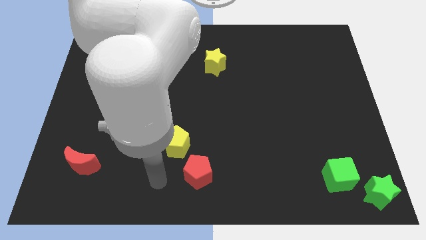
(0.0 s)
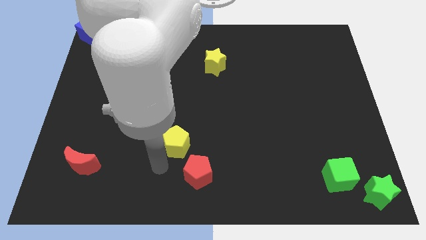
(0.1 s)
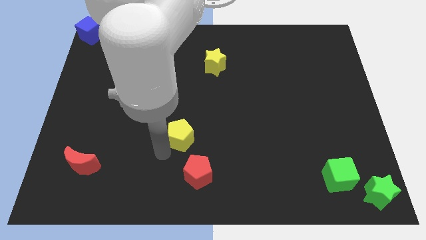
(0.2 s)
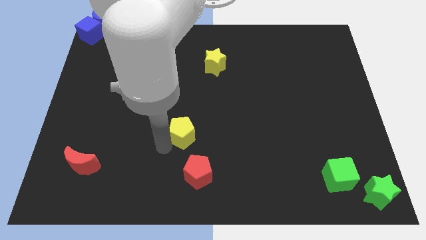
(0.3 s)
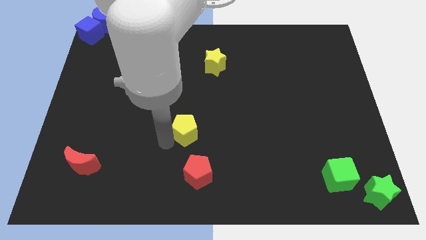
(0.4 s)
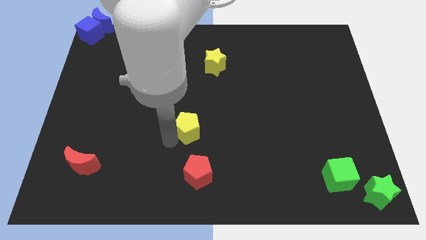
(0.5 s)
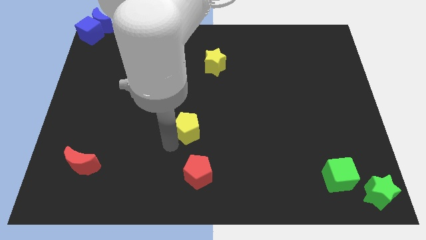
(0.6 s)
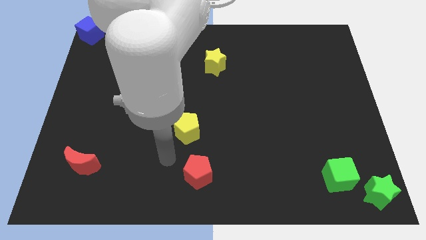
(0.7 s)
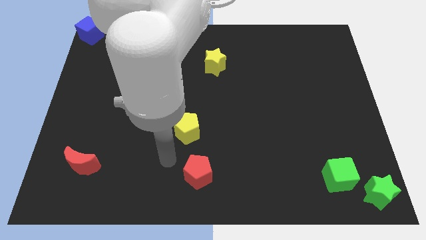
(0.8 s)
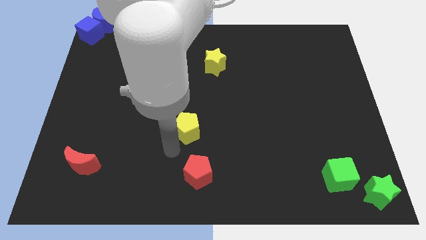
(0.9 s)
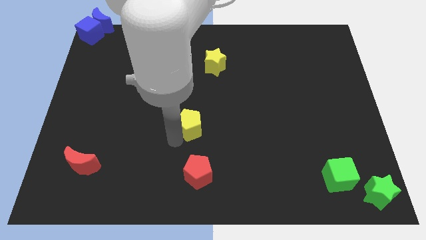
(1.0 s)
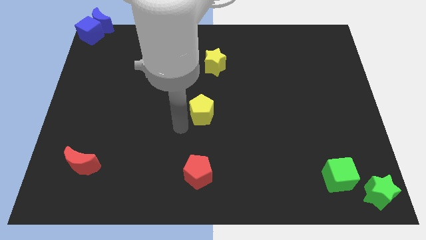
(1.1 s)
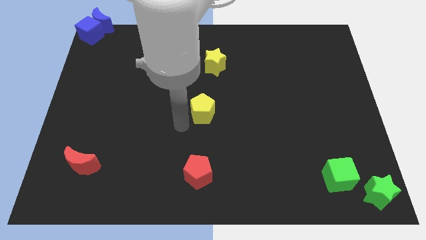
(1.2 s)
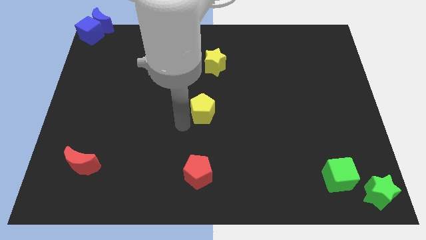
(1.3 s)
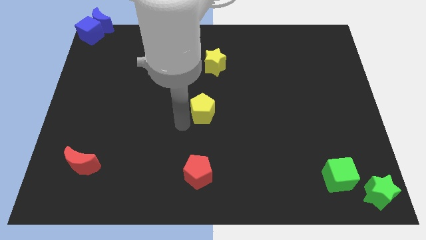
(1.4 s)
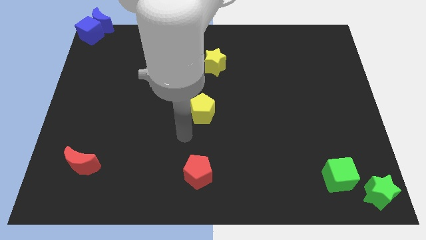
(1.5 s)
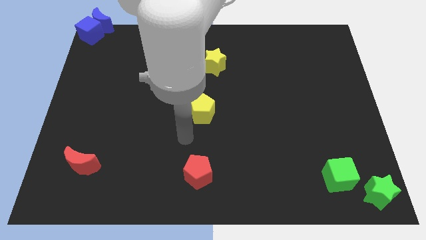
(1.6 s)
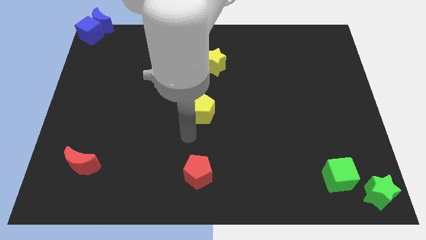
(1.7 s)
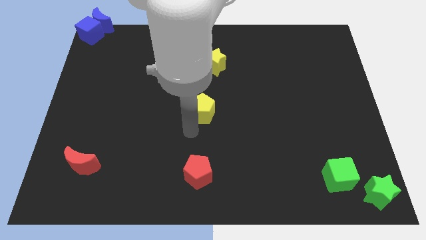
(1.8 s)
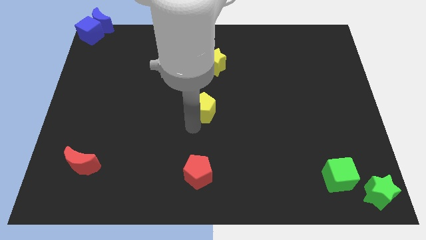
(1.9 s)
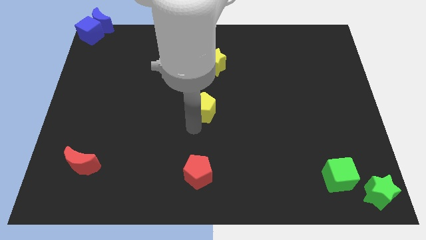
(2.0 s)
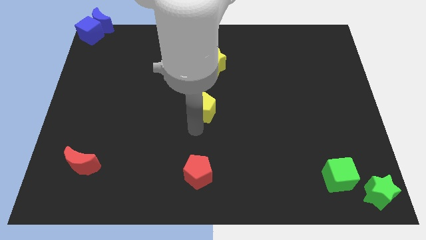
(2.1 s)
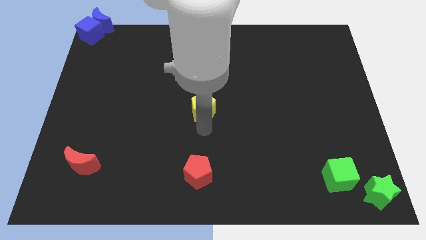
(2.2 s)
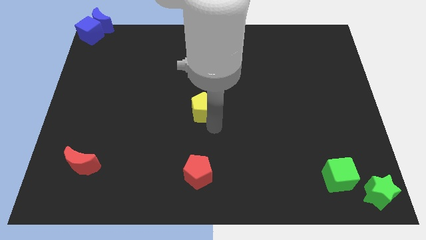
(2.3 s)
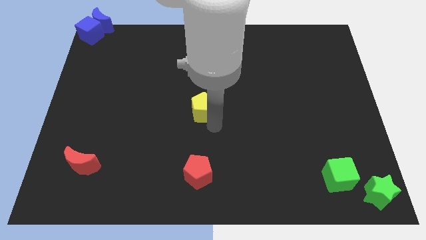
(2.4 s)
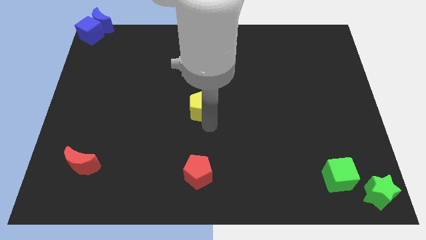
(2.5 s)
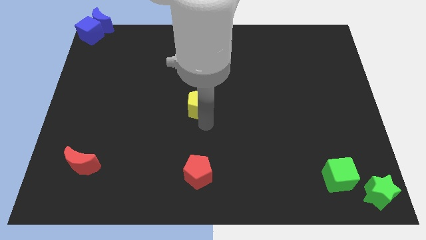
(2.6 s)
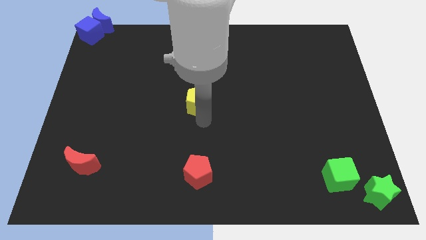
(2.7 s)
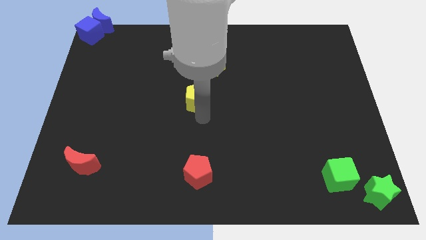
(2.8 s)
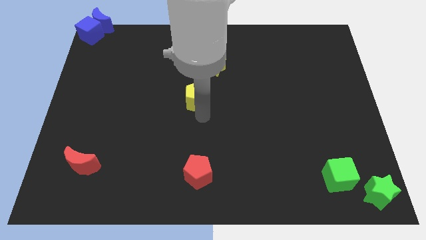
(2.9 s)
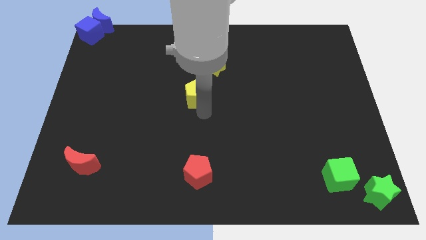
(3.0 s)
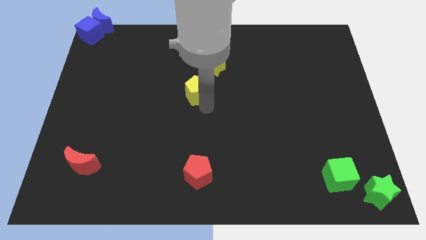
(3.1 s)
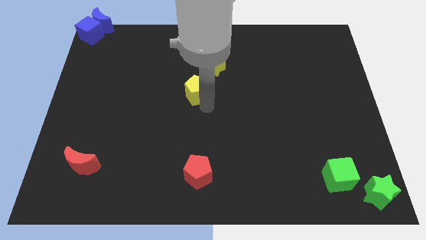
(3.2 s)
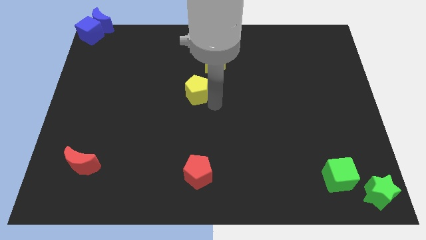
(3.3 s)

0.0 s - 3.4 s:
push yellow pentagon towards center of the board

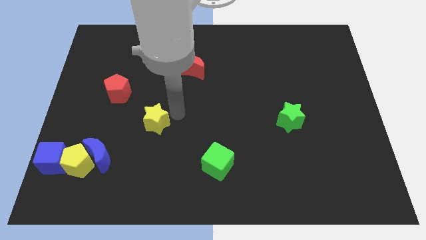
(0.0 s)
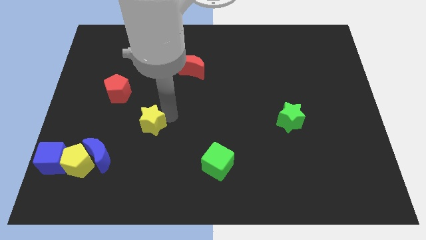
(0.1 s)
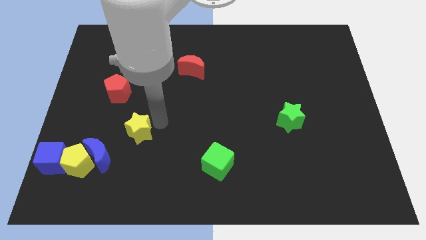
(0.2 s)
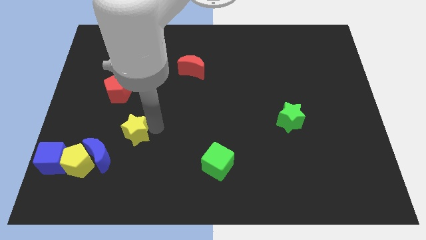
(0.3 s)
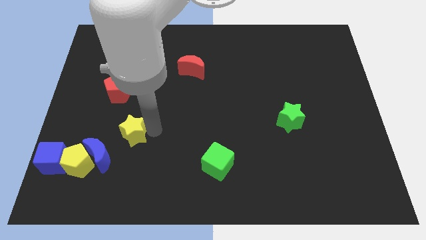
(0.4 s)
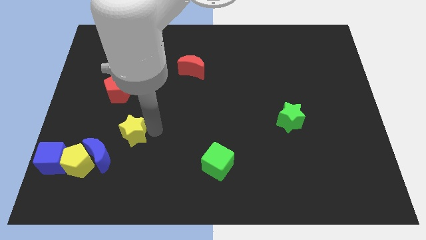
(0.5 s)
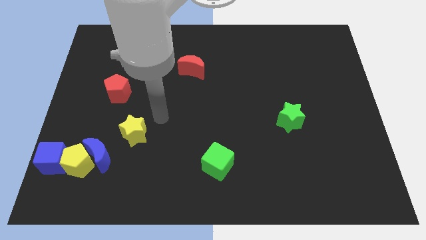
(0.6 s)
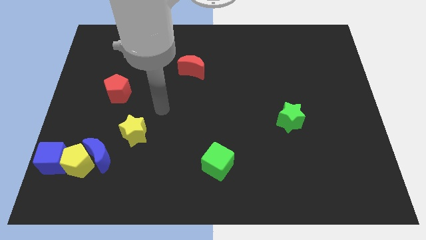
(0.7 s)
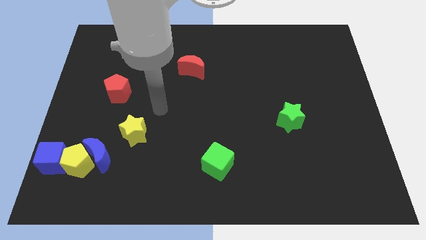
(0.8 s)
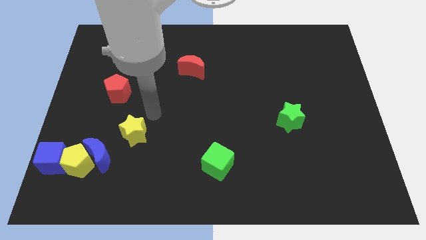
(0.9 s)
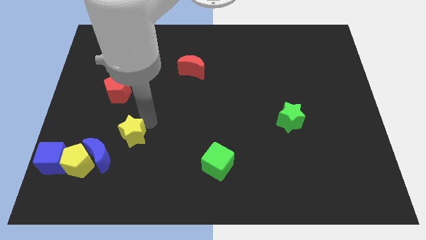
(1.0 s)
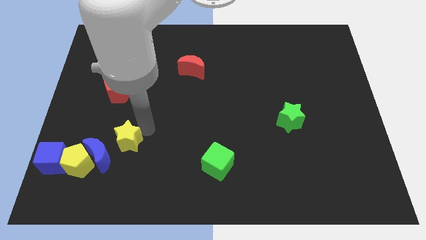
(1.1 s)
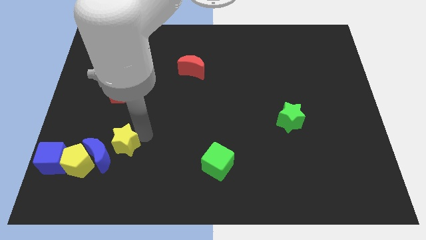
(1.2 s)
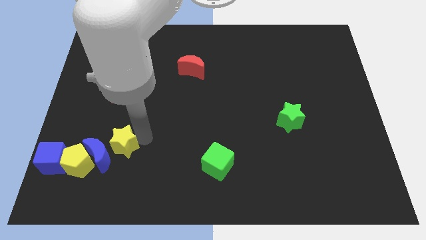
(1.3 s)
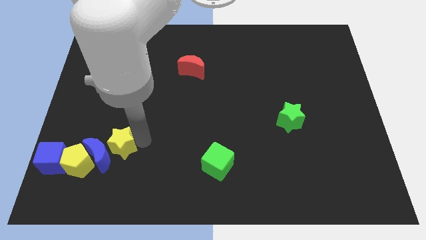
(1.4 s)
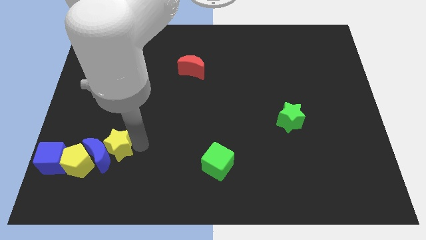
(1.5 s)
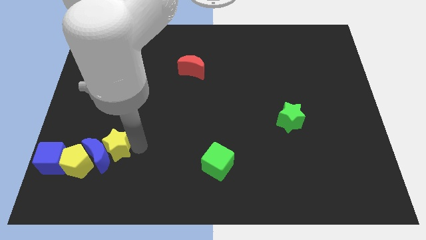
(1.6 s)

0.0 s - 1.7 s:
move the yellow star into the blue moon

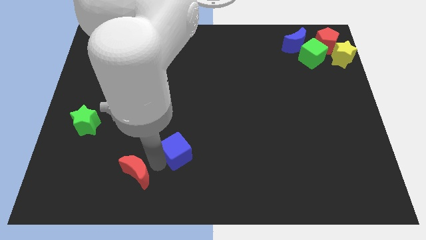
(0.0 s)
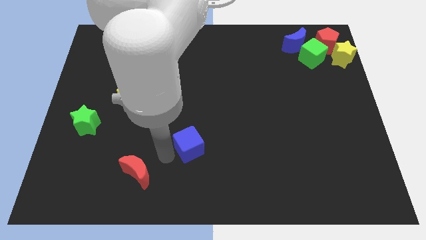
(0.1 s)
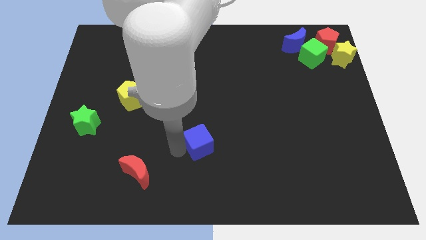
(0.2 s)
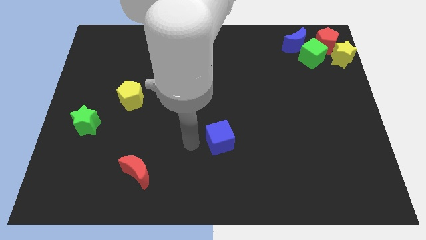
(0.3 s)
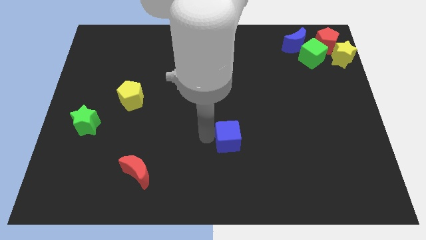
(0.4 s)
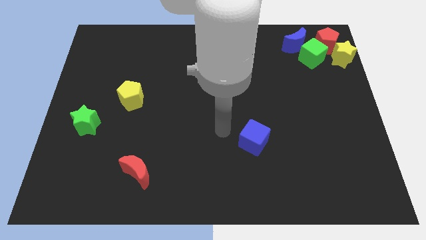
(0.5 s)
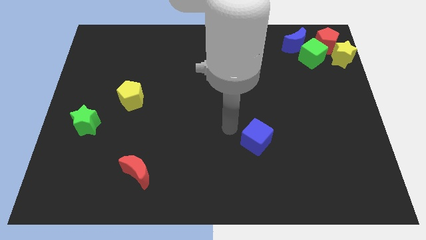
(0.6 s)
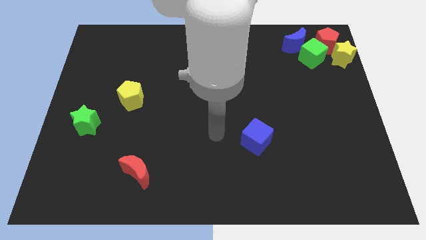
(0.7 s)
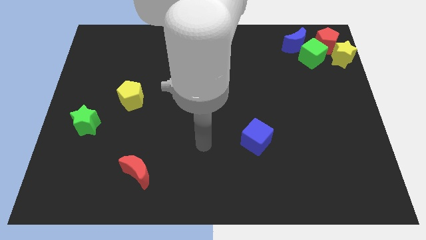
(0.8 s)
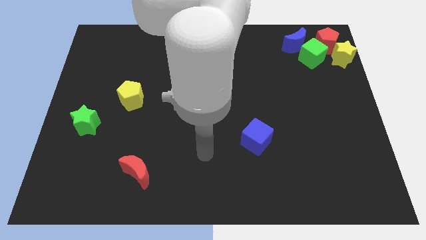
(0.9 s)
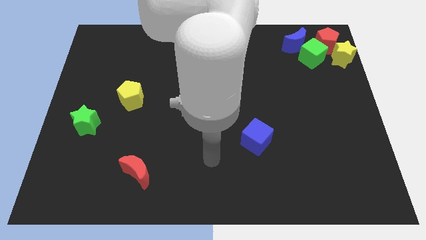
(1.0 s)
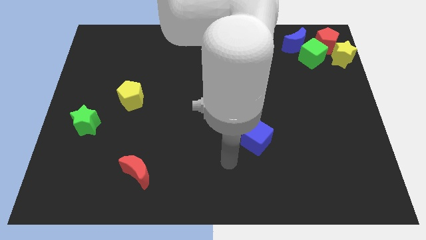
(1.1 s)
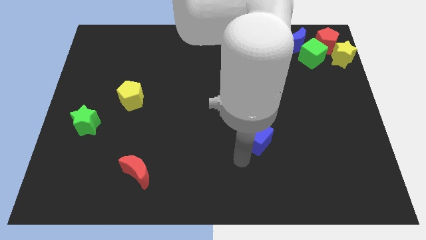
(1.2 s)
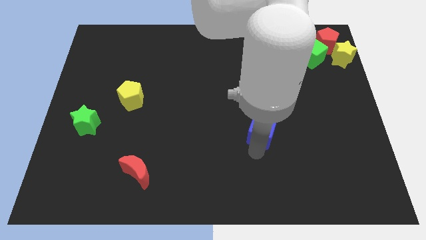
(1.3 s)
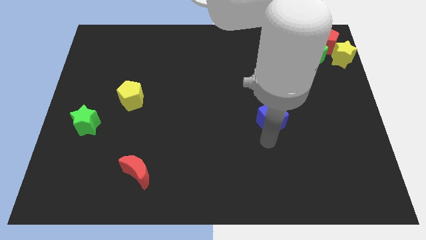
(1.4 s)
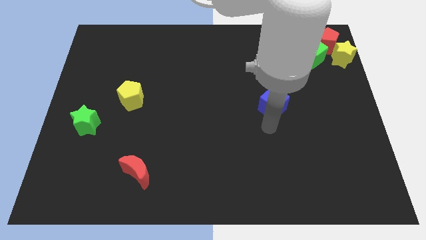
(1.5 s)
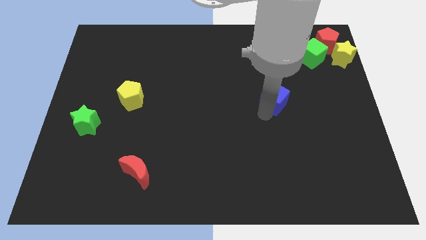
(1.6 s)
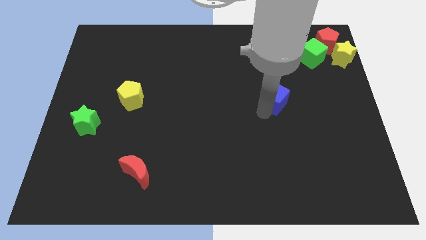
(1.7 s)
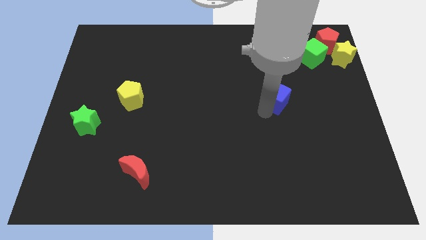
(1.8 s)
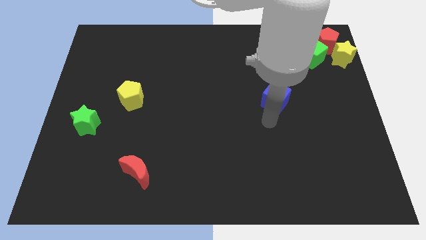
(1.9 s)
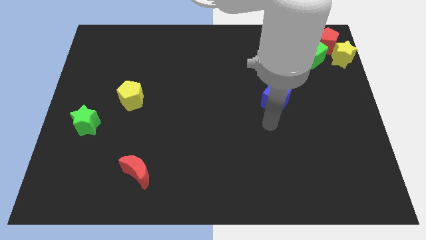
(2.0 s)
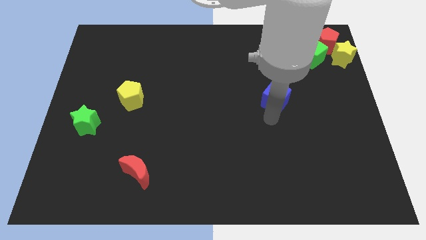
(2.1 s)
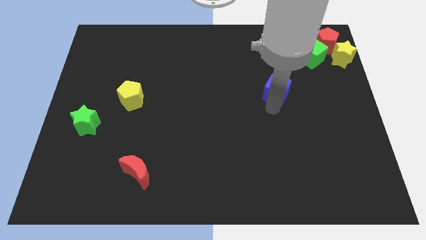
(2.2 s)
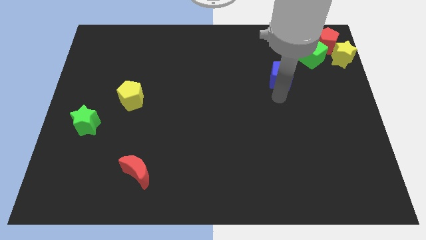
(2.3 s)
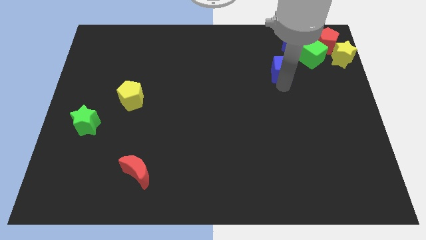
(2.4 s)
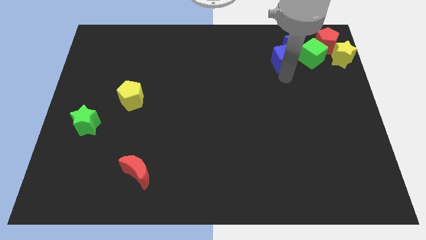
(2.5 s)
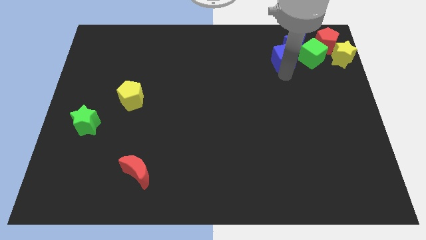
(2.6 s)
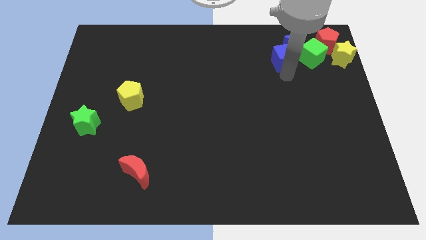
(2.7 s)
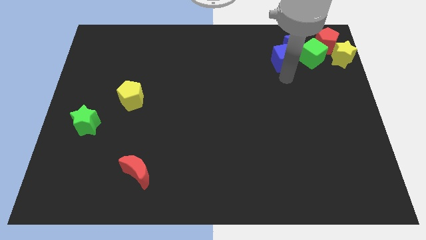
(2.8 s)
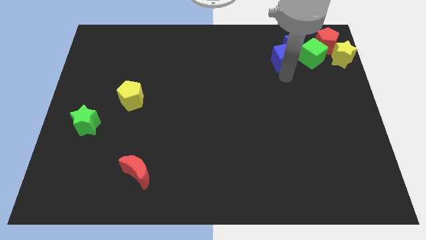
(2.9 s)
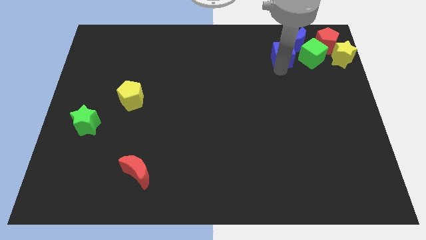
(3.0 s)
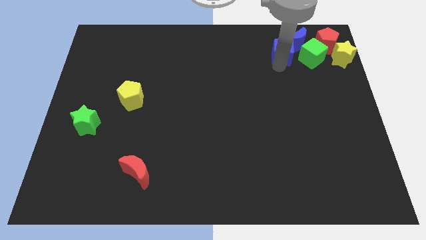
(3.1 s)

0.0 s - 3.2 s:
place the blue cube to the left side of green cube

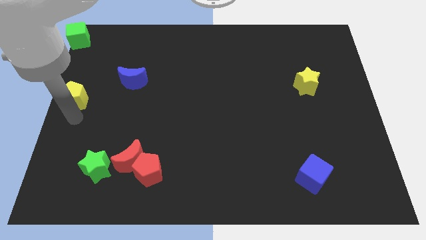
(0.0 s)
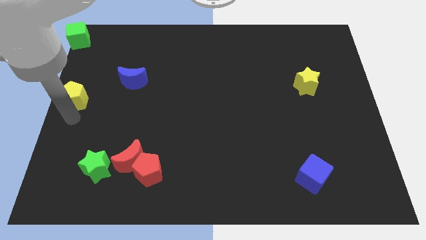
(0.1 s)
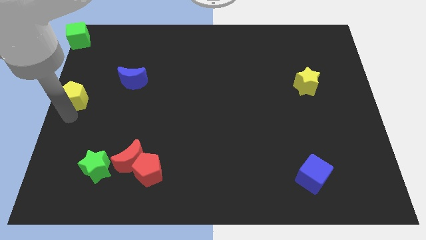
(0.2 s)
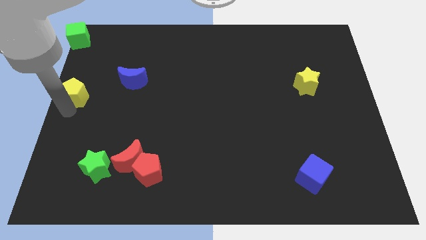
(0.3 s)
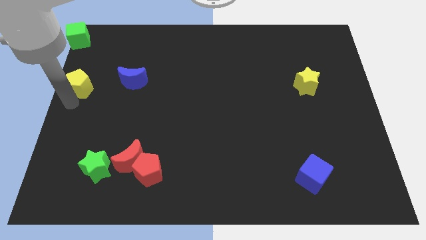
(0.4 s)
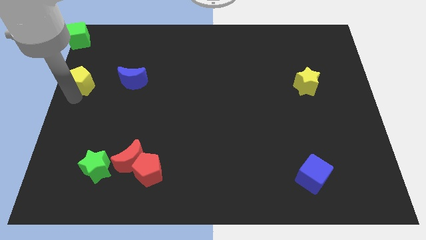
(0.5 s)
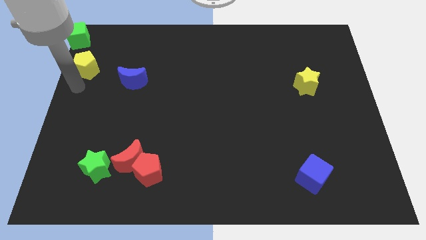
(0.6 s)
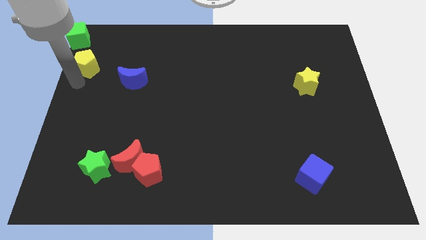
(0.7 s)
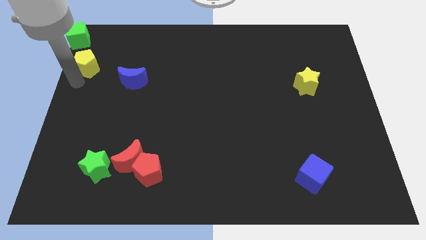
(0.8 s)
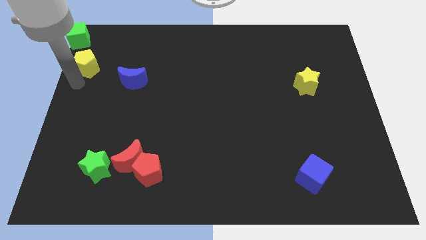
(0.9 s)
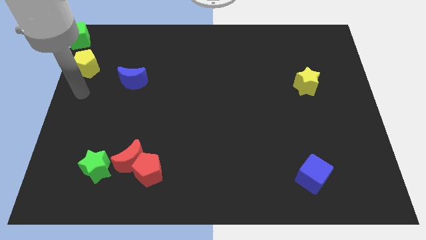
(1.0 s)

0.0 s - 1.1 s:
push the yellow pentagon towards the bottom side of the green cube
